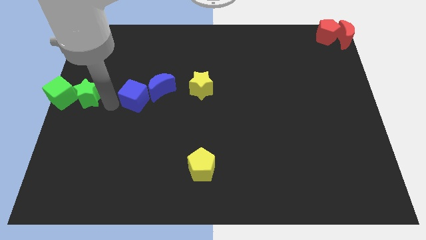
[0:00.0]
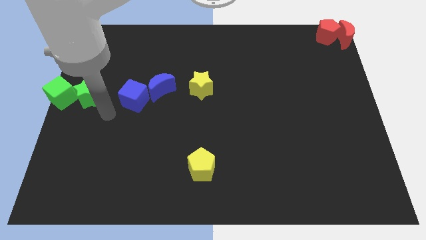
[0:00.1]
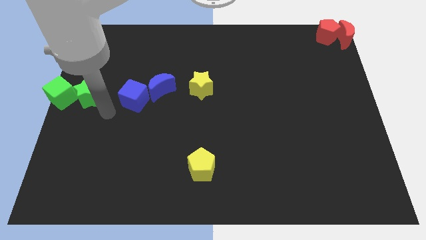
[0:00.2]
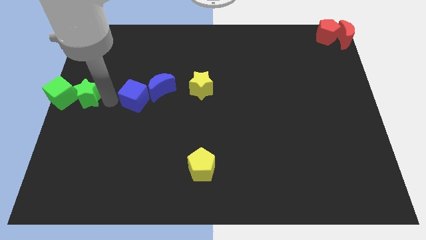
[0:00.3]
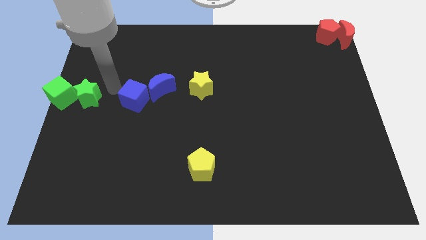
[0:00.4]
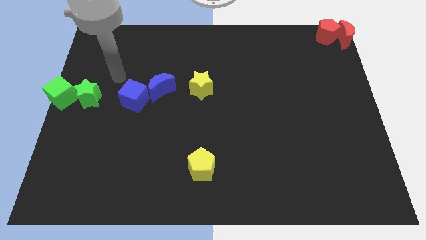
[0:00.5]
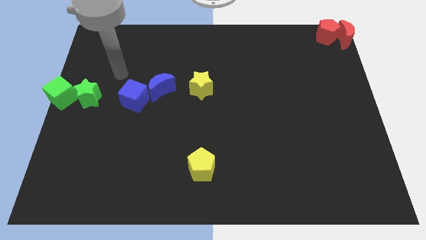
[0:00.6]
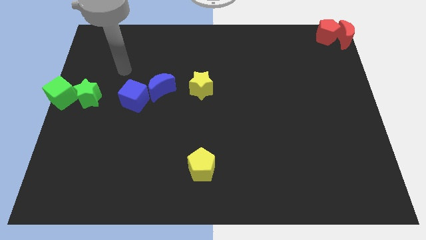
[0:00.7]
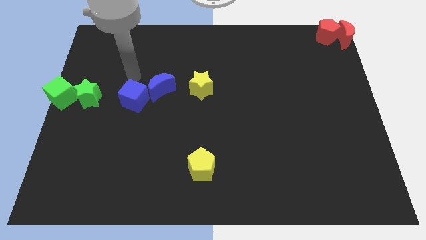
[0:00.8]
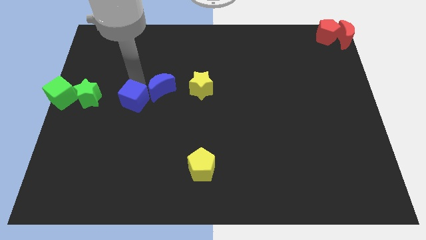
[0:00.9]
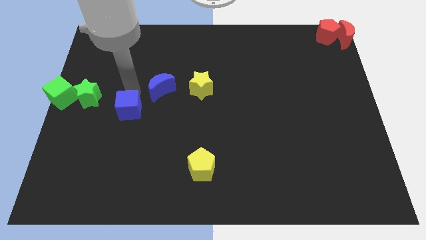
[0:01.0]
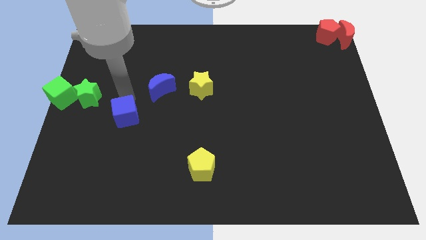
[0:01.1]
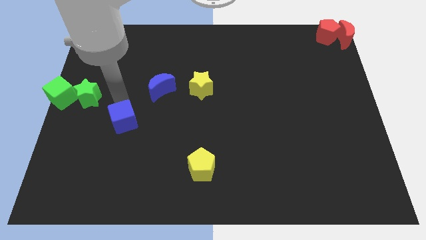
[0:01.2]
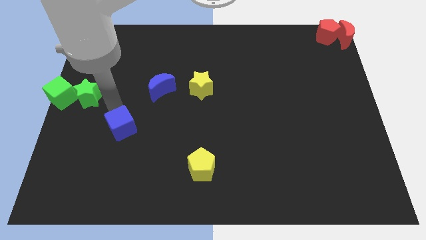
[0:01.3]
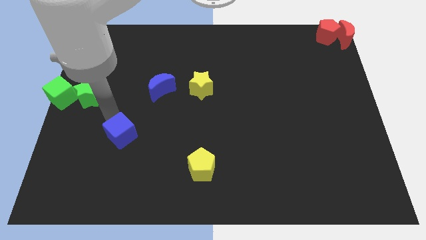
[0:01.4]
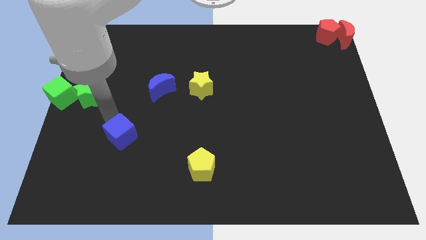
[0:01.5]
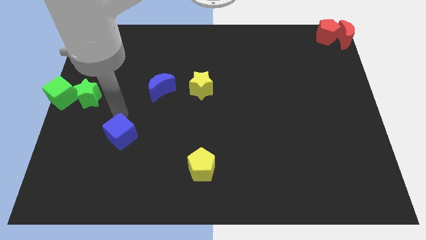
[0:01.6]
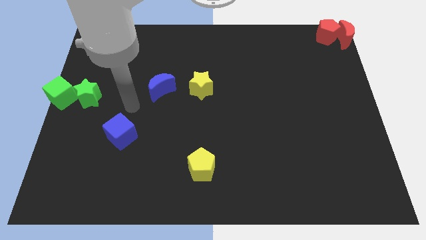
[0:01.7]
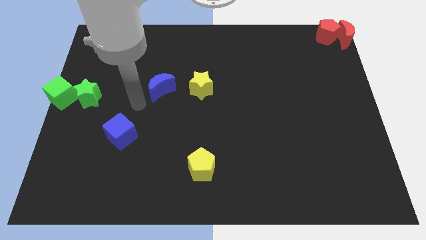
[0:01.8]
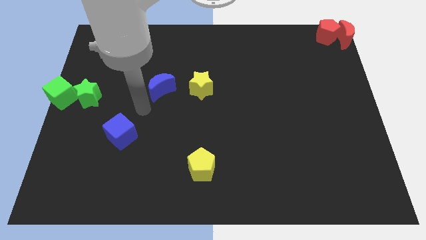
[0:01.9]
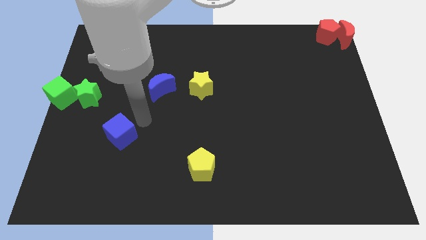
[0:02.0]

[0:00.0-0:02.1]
slightly push the blue cube to the bottom

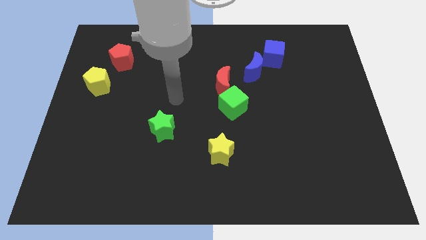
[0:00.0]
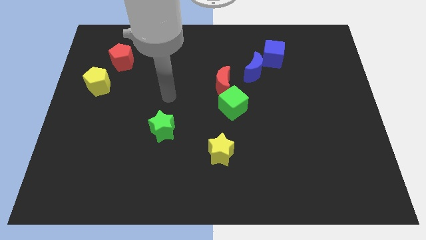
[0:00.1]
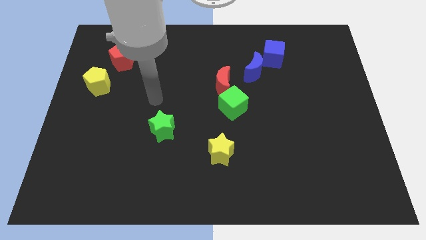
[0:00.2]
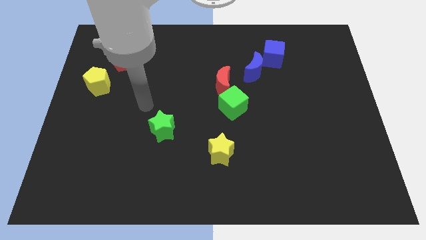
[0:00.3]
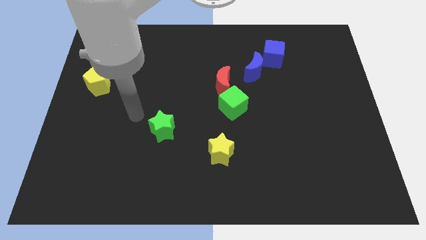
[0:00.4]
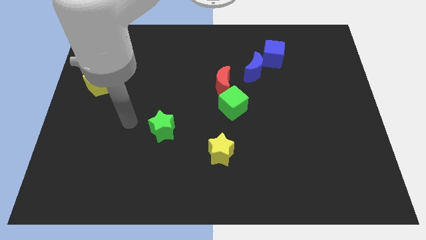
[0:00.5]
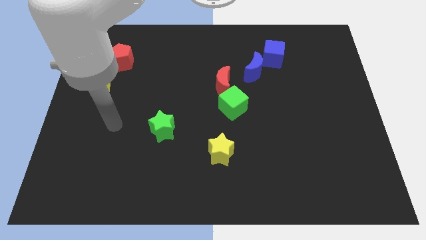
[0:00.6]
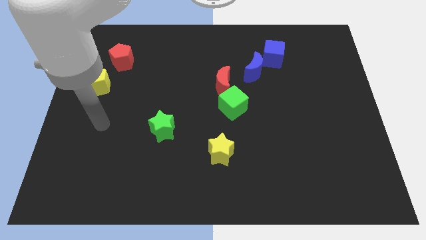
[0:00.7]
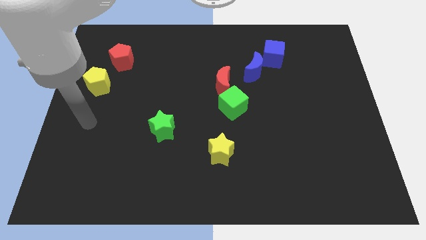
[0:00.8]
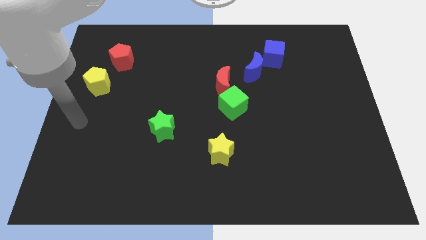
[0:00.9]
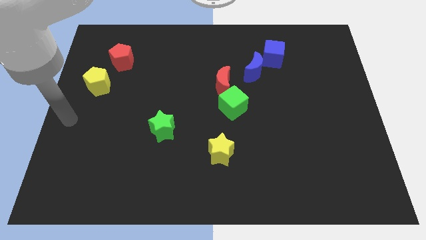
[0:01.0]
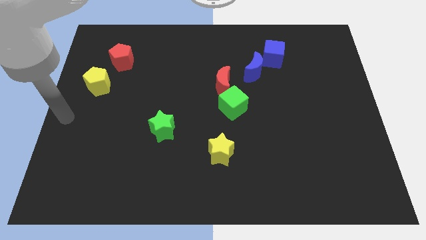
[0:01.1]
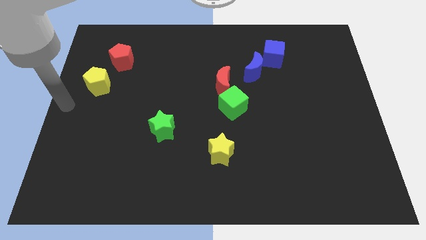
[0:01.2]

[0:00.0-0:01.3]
move your hand to the center left of the board

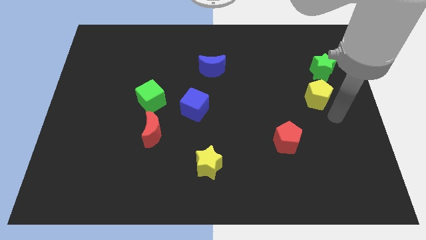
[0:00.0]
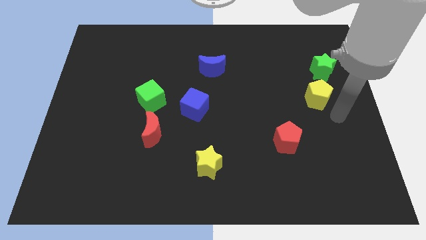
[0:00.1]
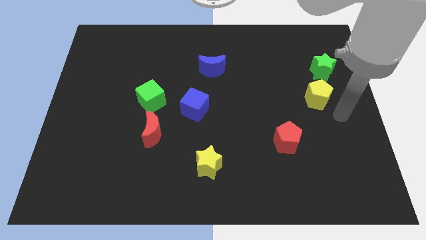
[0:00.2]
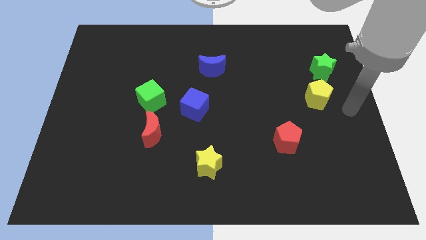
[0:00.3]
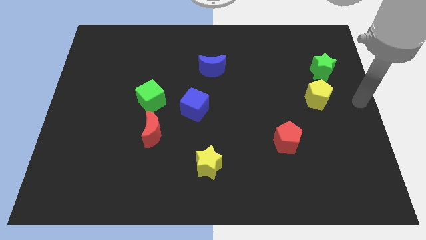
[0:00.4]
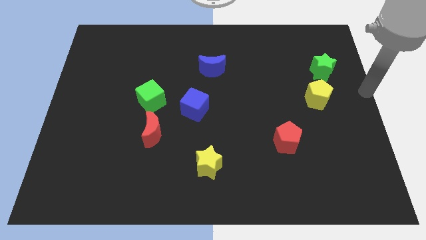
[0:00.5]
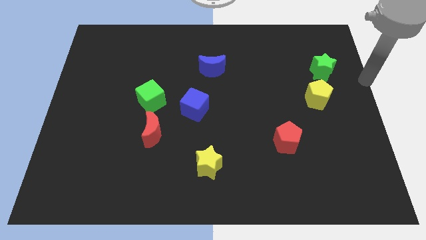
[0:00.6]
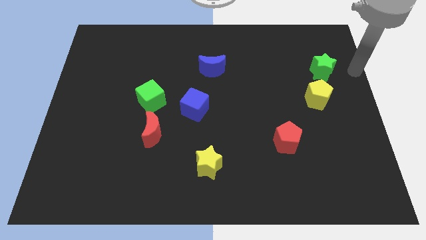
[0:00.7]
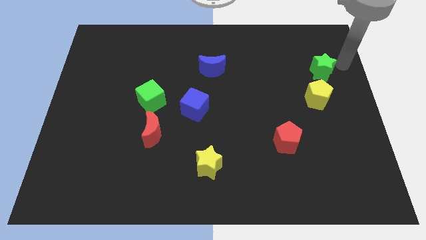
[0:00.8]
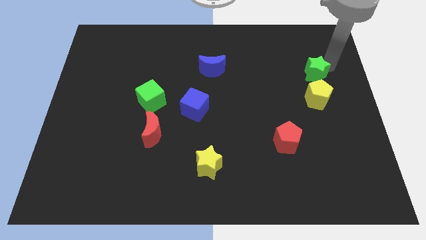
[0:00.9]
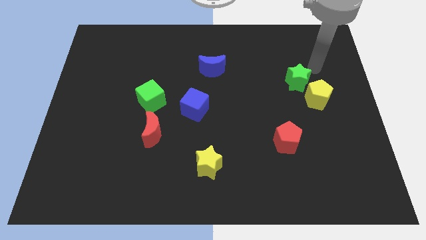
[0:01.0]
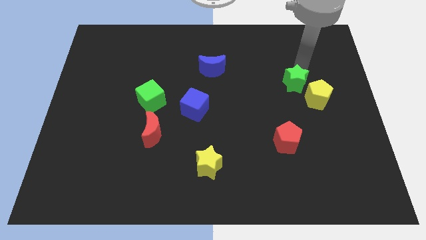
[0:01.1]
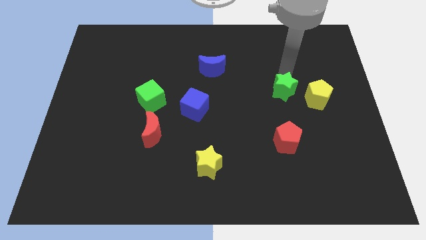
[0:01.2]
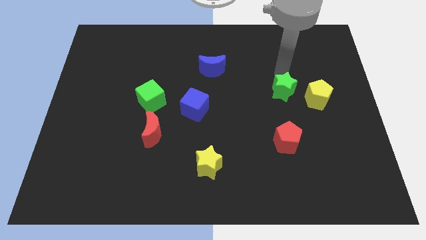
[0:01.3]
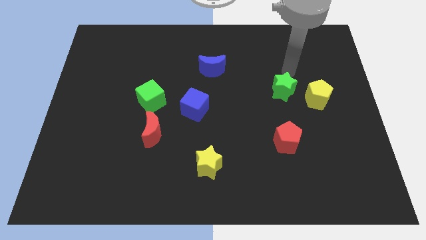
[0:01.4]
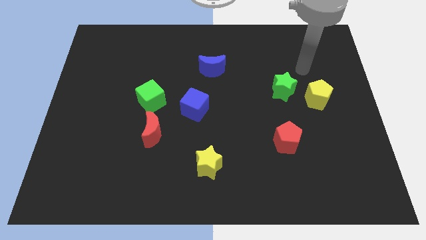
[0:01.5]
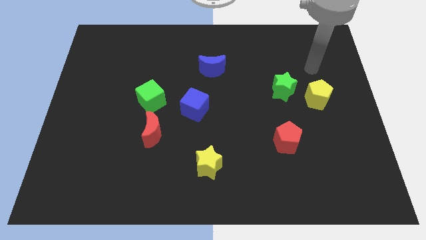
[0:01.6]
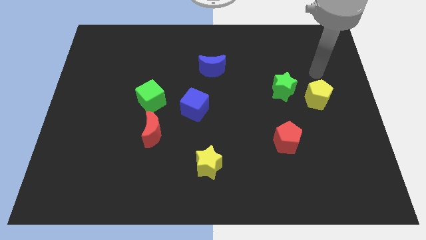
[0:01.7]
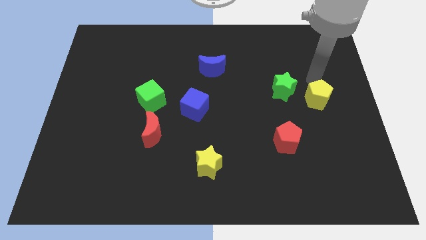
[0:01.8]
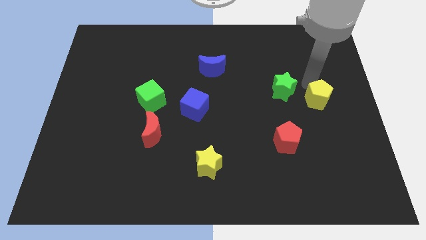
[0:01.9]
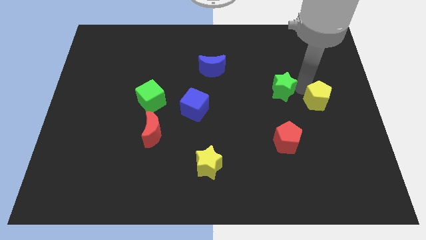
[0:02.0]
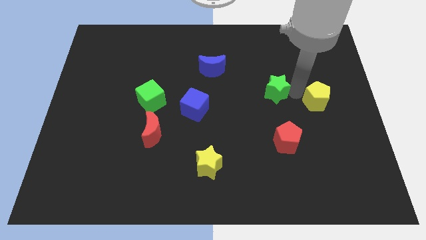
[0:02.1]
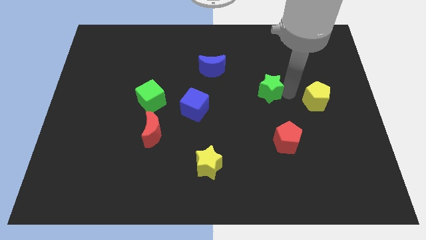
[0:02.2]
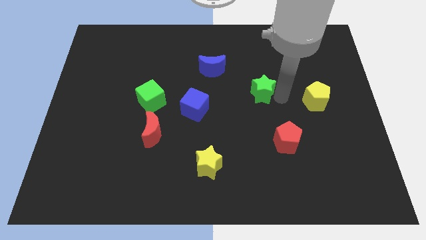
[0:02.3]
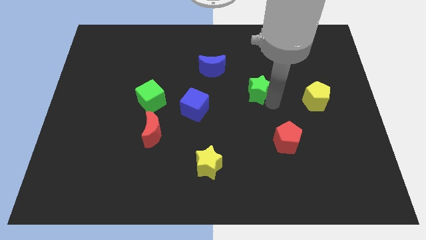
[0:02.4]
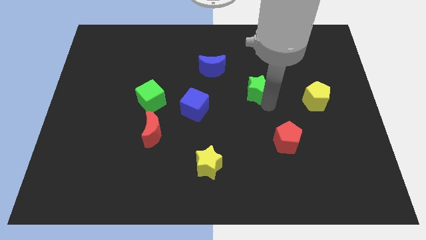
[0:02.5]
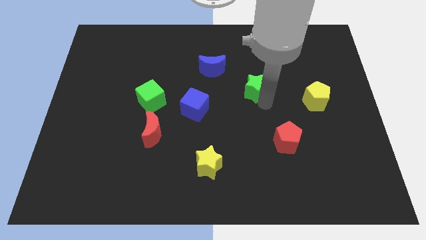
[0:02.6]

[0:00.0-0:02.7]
push green star slightly towards left

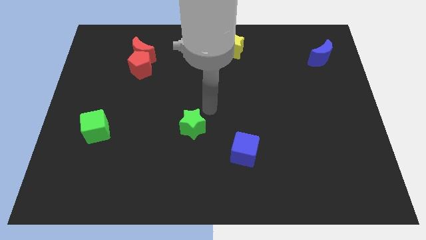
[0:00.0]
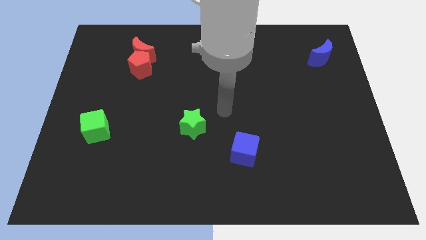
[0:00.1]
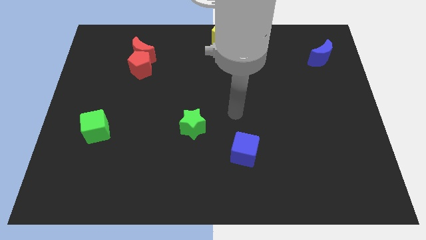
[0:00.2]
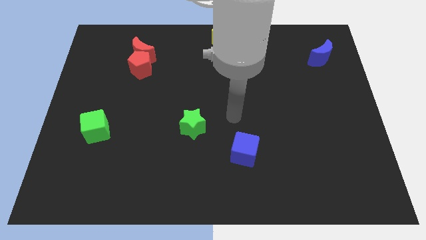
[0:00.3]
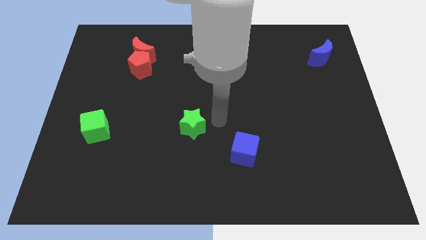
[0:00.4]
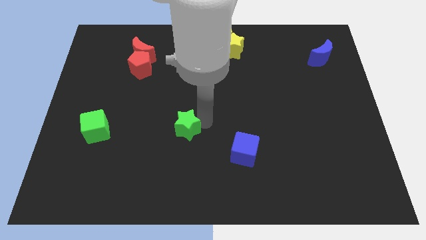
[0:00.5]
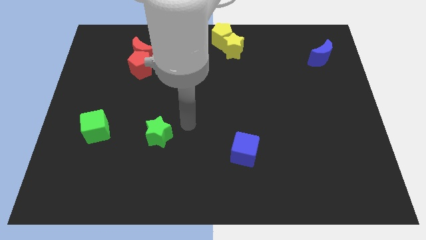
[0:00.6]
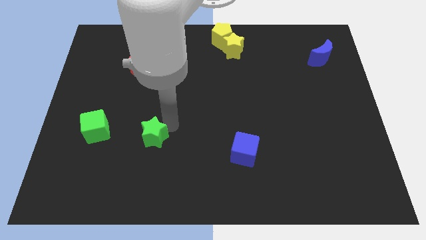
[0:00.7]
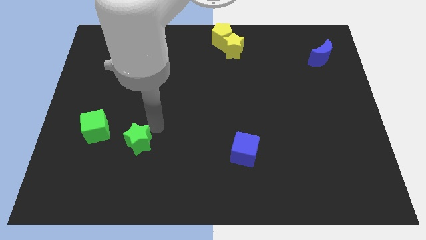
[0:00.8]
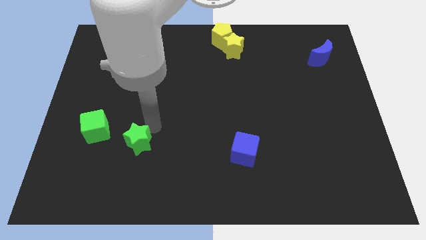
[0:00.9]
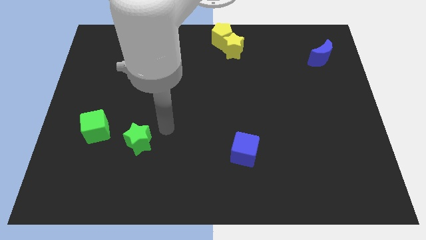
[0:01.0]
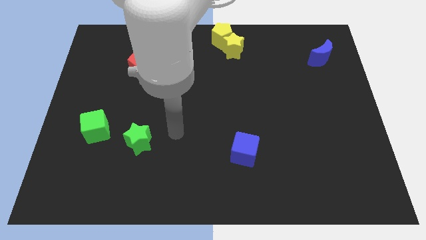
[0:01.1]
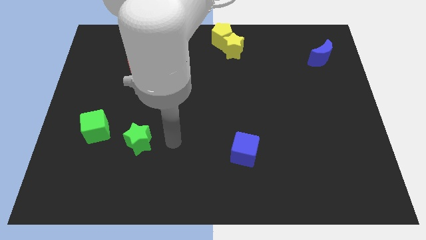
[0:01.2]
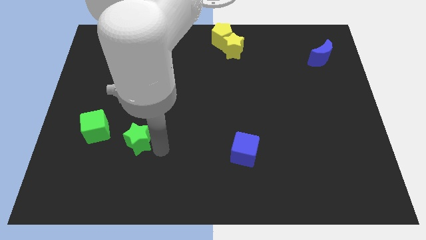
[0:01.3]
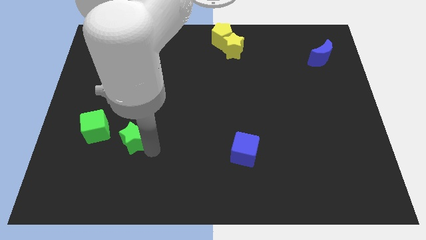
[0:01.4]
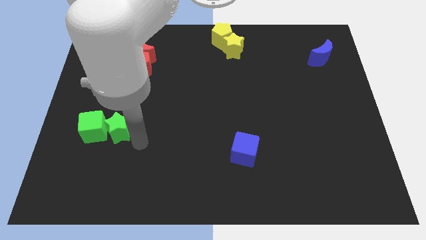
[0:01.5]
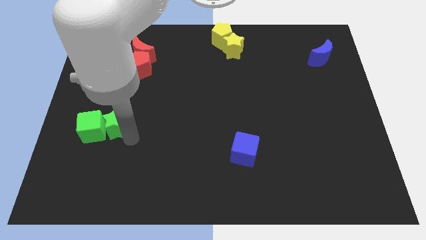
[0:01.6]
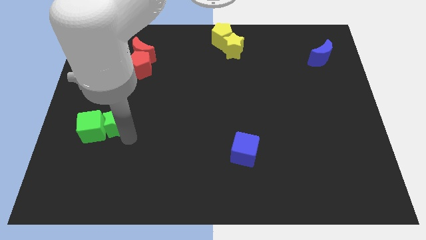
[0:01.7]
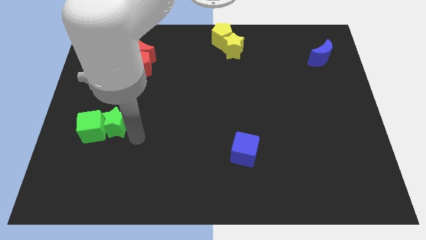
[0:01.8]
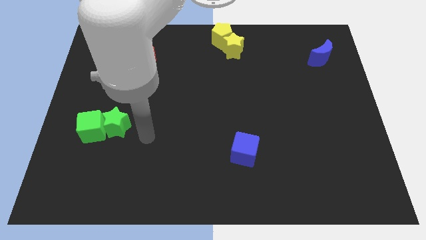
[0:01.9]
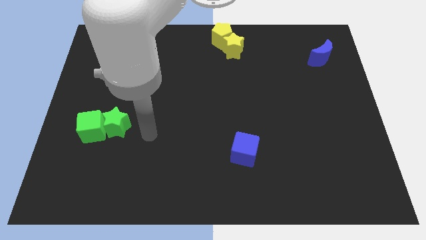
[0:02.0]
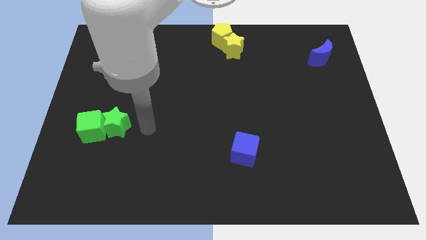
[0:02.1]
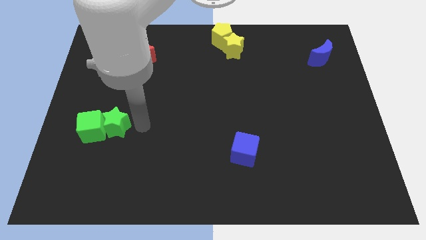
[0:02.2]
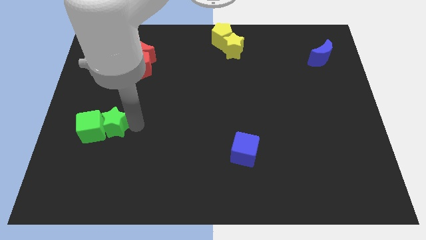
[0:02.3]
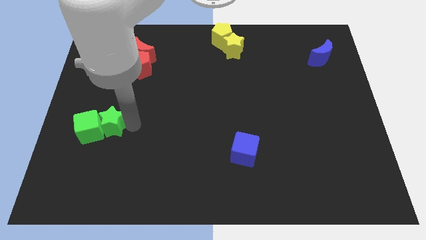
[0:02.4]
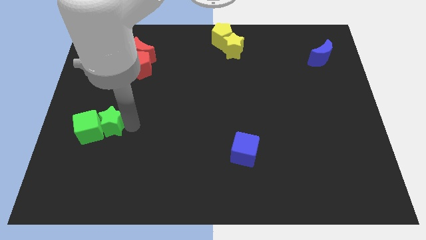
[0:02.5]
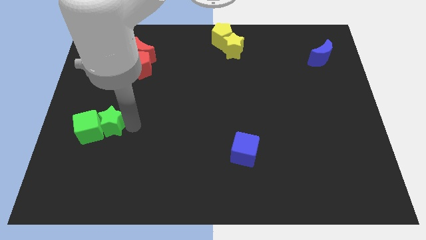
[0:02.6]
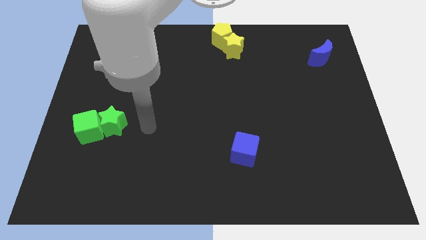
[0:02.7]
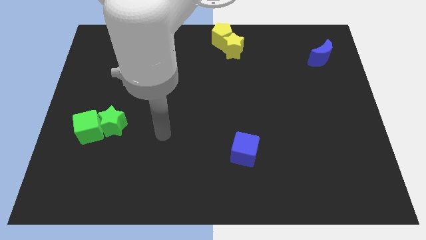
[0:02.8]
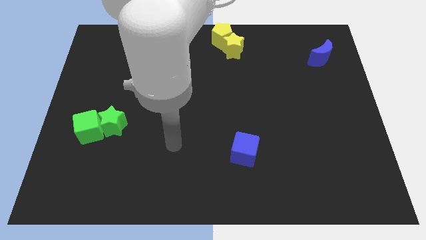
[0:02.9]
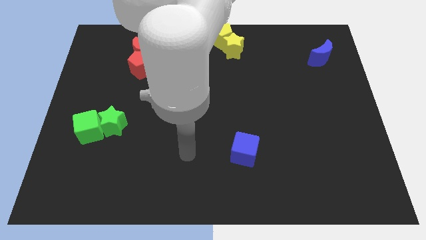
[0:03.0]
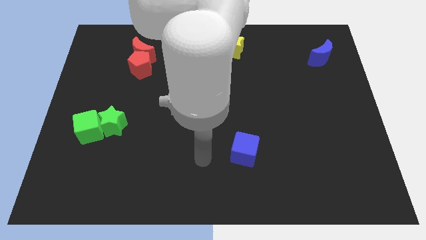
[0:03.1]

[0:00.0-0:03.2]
put the green star into the green cube
